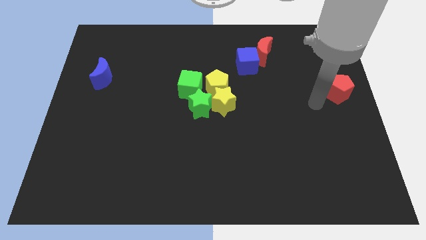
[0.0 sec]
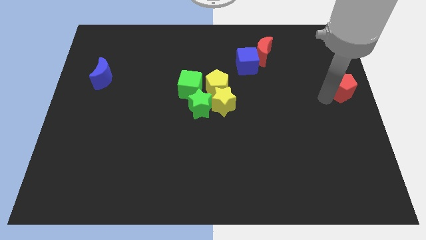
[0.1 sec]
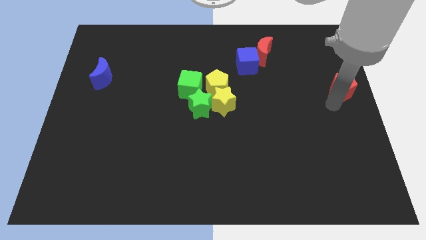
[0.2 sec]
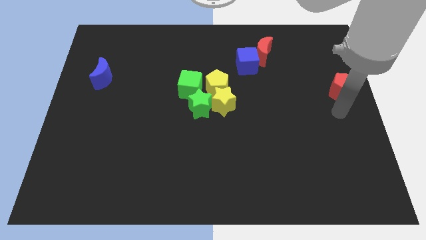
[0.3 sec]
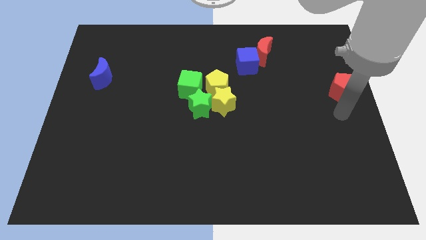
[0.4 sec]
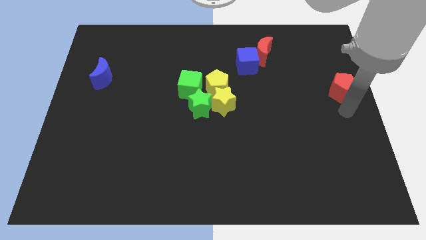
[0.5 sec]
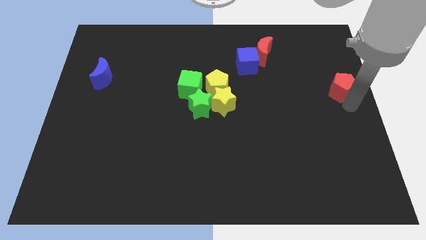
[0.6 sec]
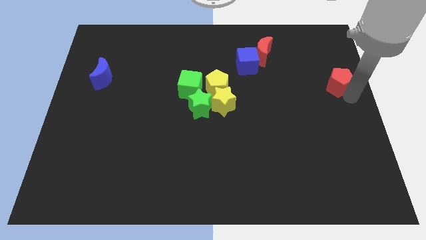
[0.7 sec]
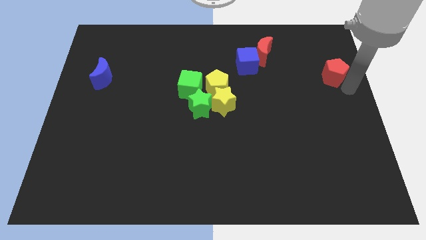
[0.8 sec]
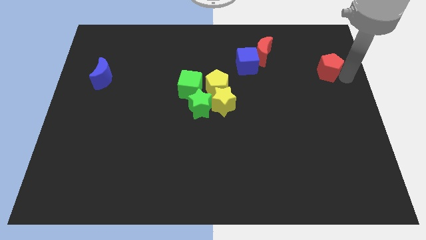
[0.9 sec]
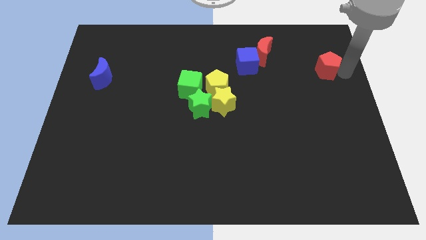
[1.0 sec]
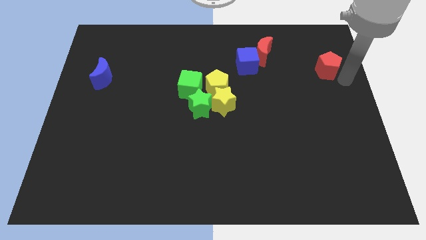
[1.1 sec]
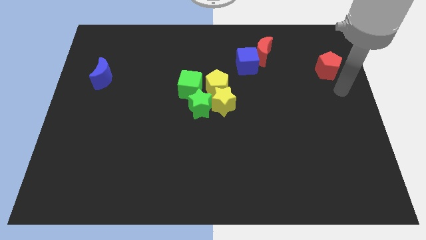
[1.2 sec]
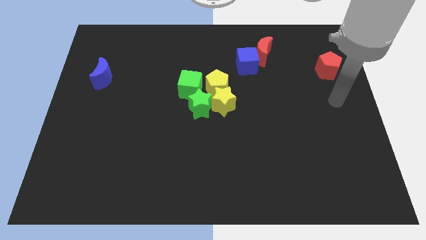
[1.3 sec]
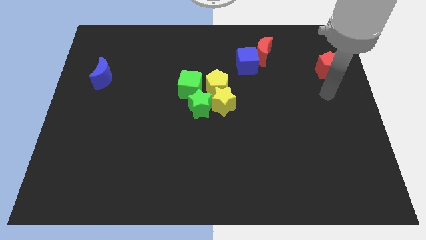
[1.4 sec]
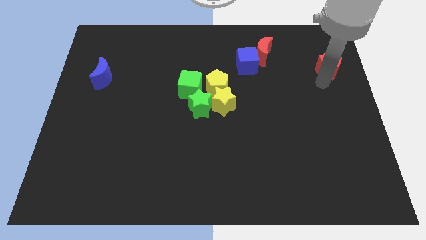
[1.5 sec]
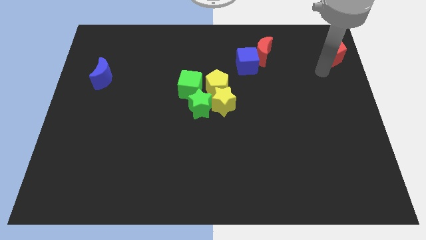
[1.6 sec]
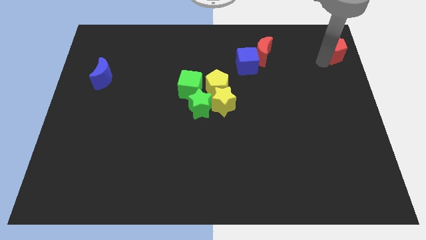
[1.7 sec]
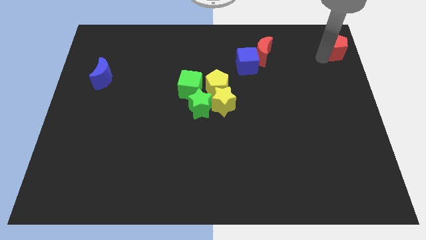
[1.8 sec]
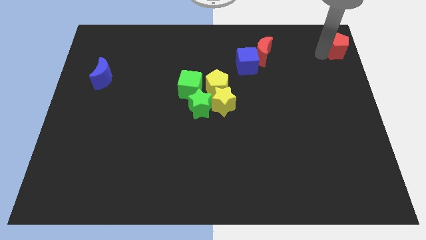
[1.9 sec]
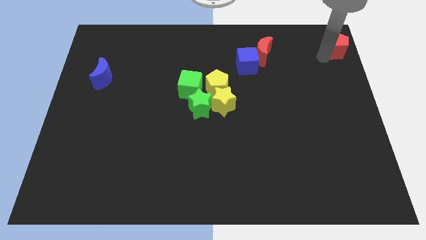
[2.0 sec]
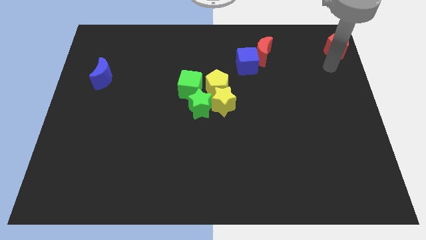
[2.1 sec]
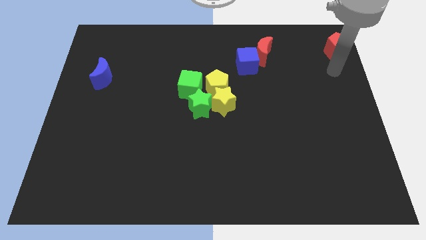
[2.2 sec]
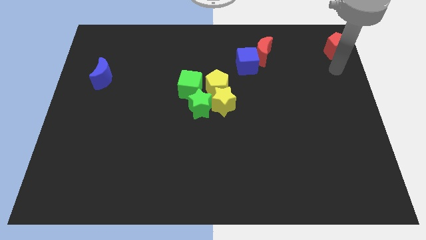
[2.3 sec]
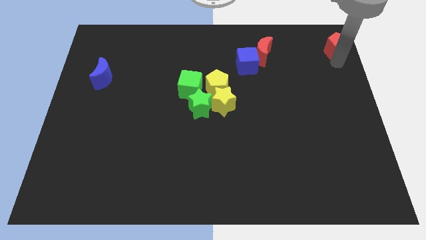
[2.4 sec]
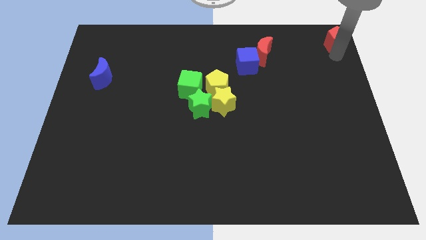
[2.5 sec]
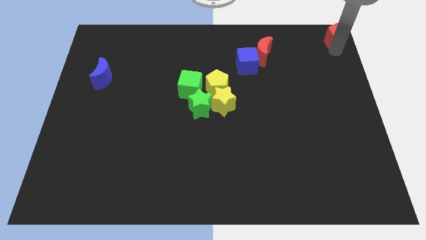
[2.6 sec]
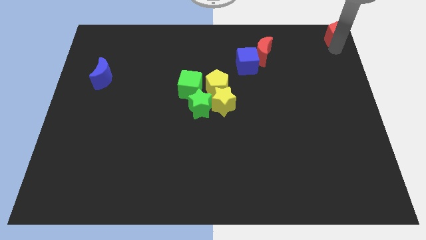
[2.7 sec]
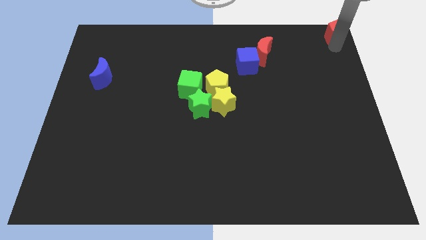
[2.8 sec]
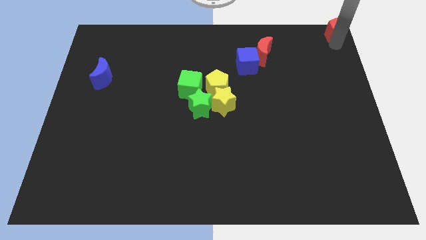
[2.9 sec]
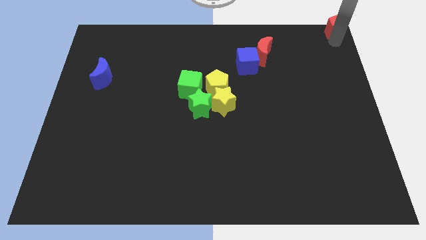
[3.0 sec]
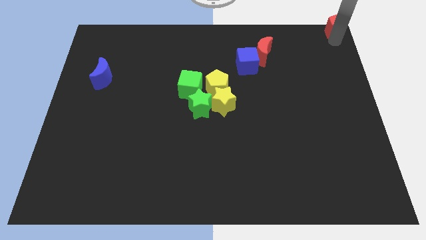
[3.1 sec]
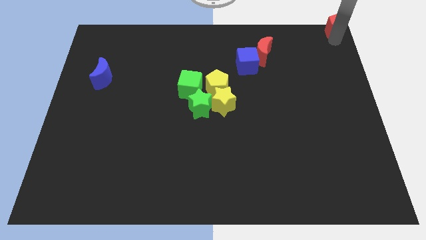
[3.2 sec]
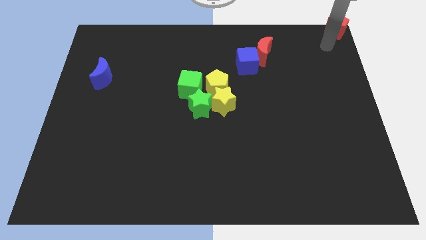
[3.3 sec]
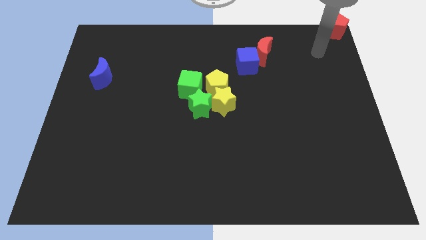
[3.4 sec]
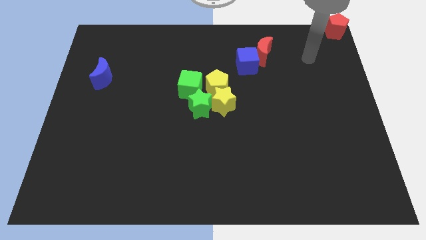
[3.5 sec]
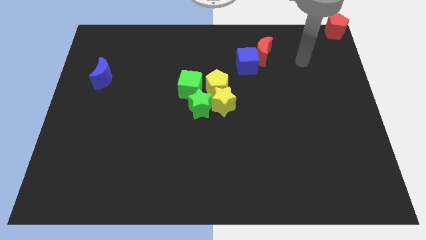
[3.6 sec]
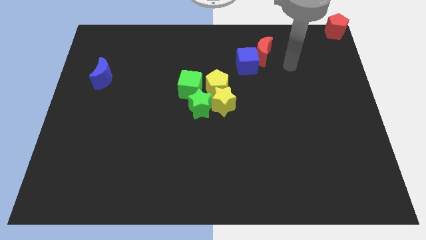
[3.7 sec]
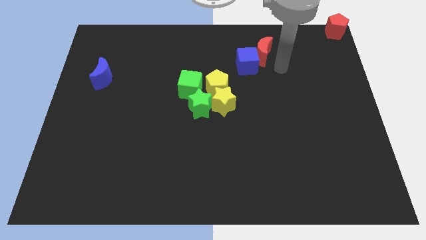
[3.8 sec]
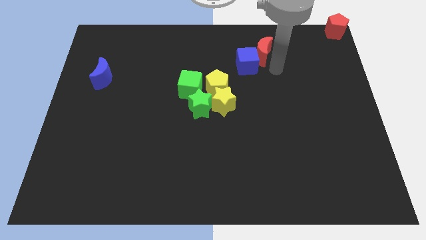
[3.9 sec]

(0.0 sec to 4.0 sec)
move the red pentagon towards the top right of the board

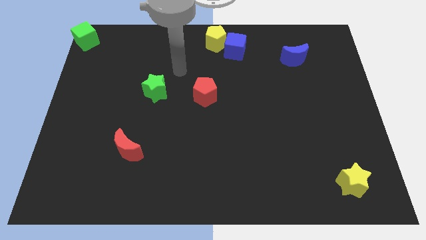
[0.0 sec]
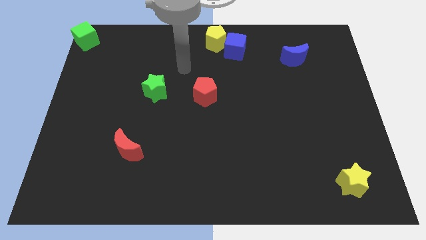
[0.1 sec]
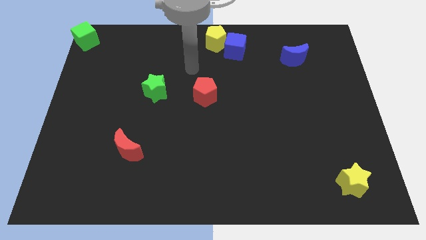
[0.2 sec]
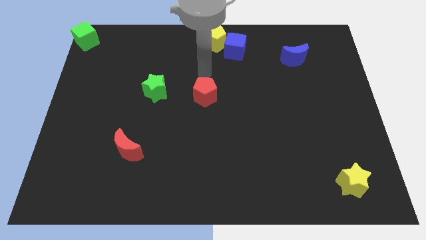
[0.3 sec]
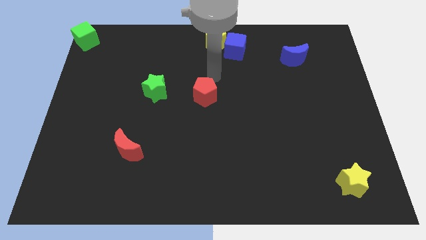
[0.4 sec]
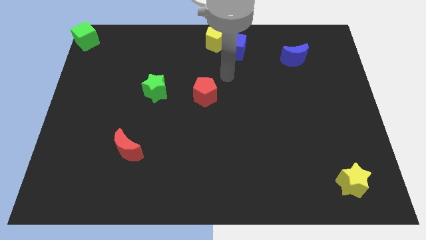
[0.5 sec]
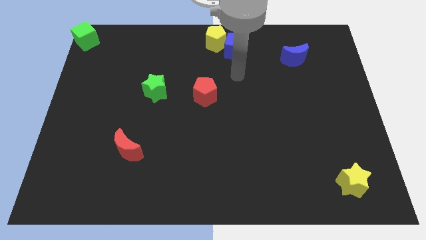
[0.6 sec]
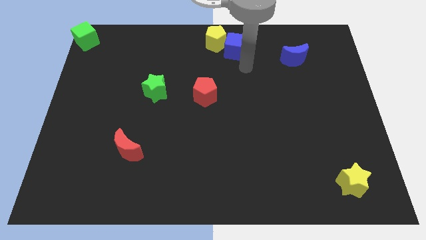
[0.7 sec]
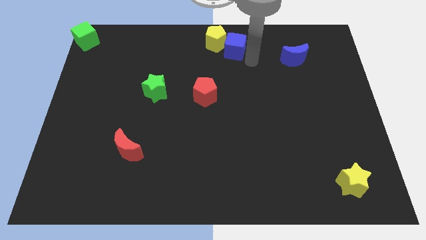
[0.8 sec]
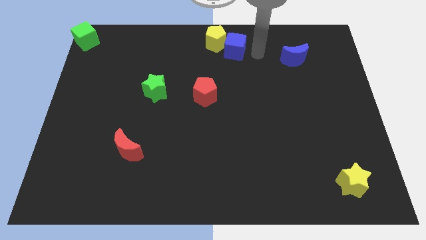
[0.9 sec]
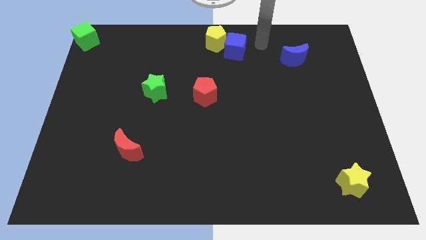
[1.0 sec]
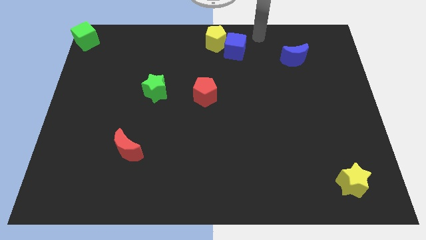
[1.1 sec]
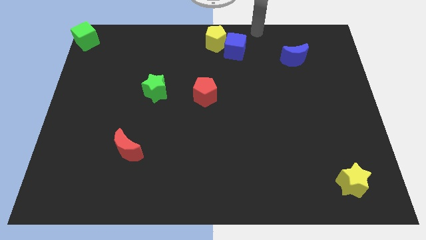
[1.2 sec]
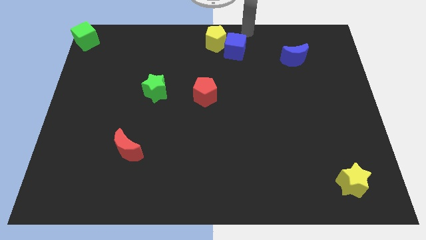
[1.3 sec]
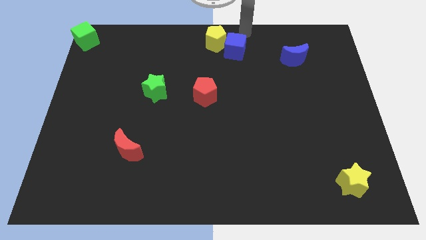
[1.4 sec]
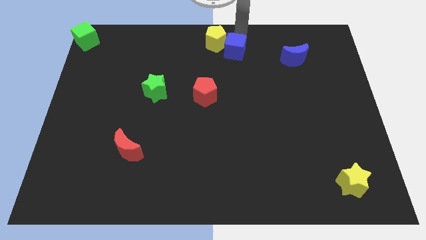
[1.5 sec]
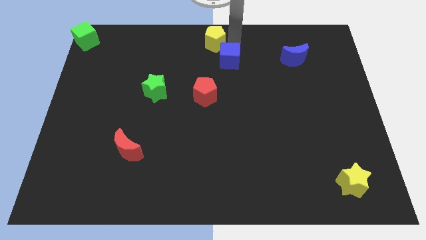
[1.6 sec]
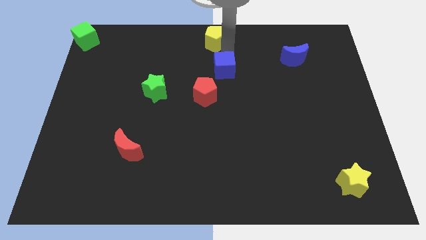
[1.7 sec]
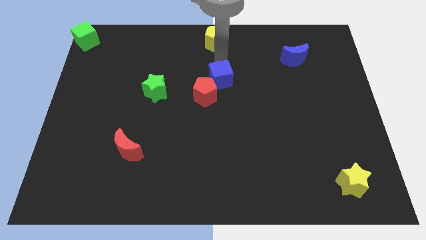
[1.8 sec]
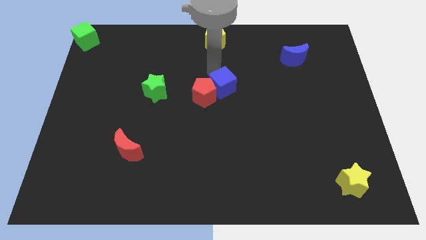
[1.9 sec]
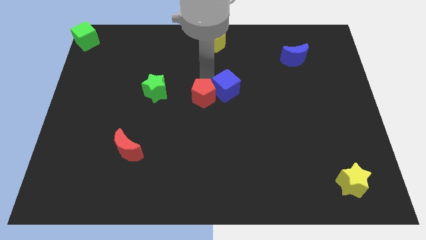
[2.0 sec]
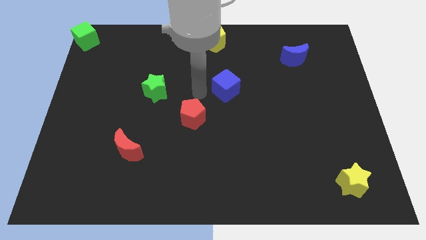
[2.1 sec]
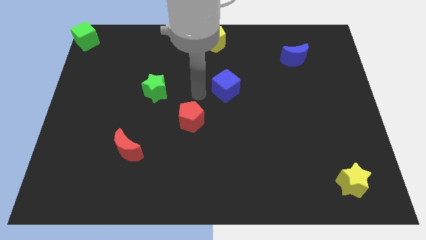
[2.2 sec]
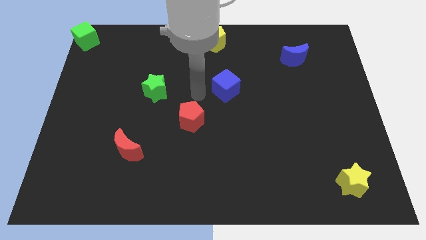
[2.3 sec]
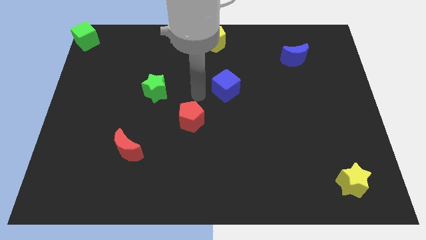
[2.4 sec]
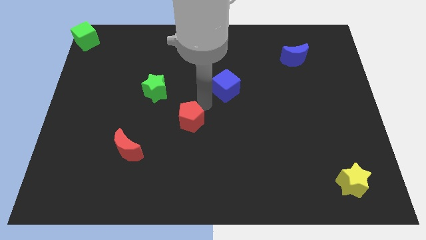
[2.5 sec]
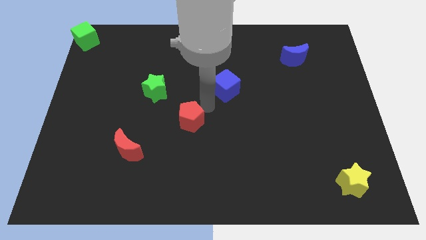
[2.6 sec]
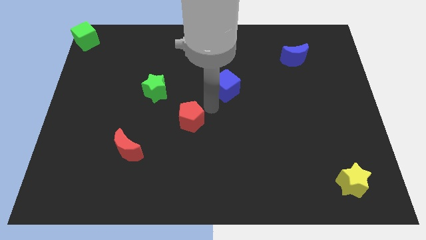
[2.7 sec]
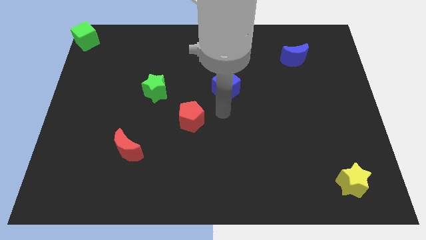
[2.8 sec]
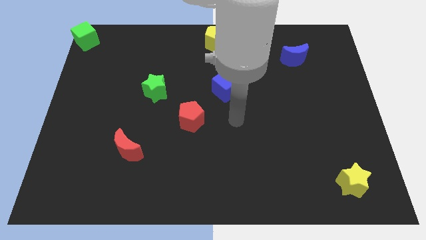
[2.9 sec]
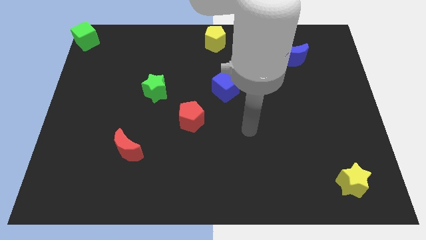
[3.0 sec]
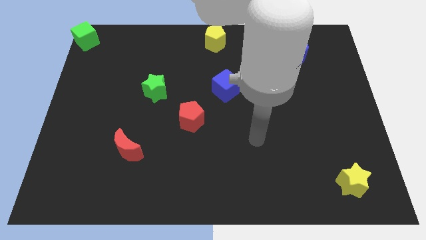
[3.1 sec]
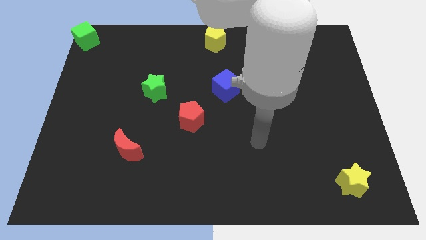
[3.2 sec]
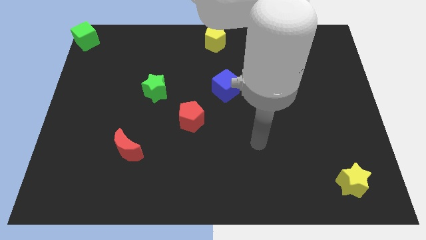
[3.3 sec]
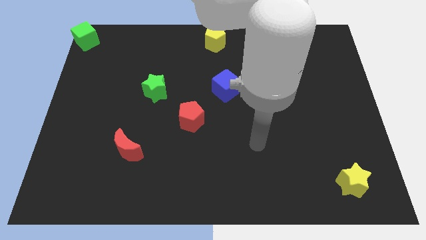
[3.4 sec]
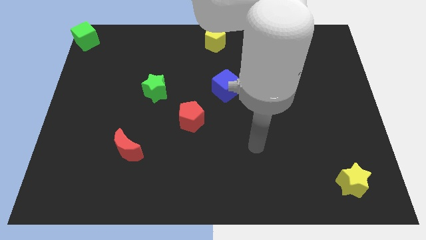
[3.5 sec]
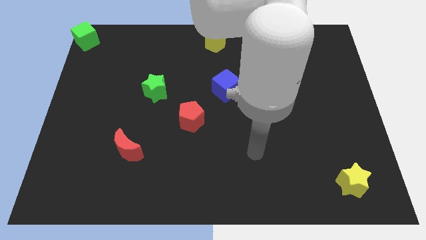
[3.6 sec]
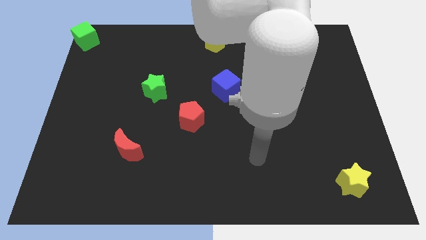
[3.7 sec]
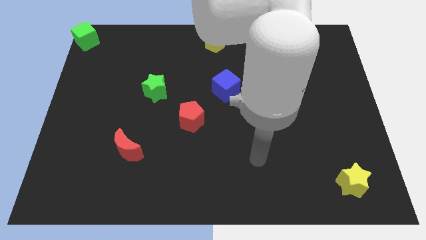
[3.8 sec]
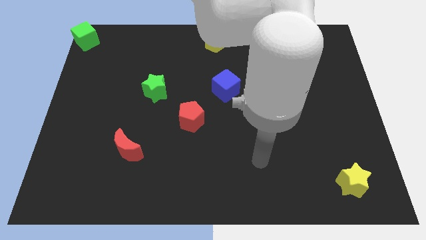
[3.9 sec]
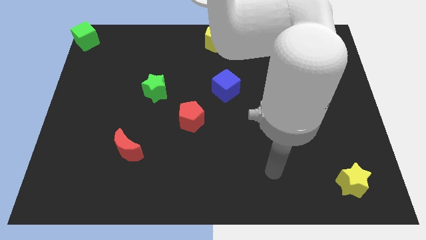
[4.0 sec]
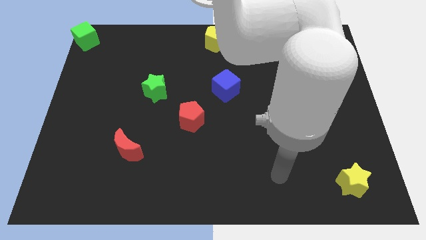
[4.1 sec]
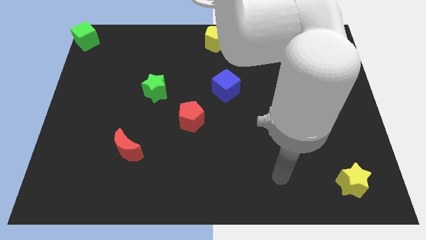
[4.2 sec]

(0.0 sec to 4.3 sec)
separate the blue cube from the yellow pentagon

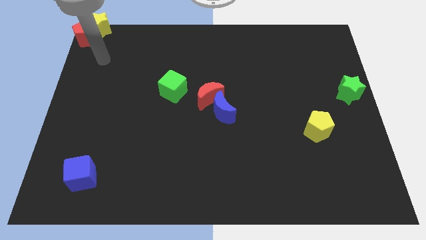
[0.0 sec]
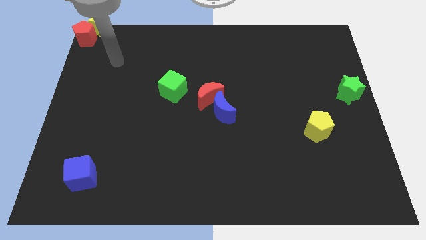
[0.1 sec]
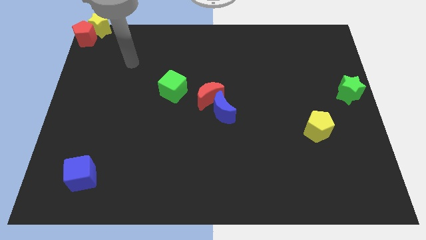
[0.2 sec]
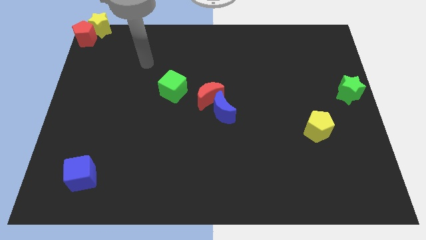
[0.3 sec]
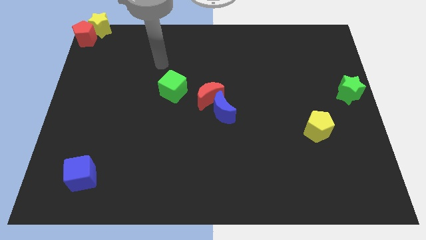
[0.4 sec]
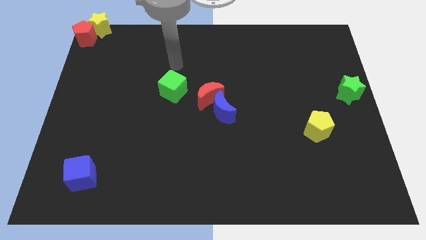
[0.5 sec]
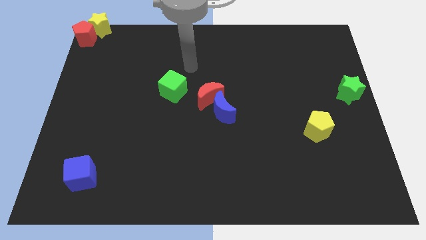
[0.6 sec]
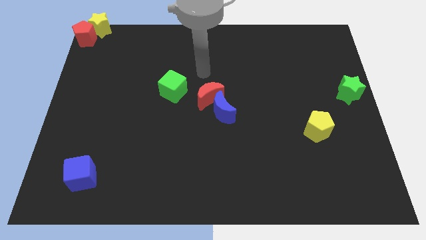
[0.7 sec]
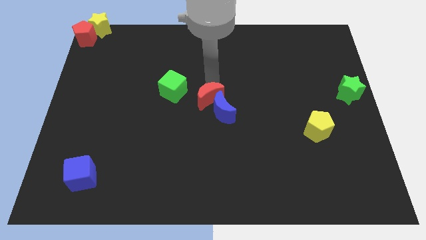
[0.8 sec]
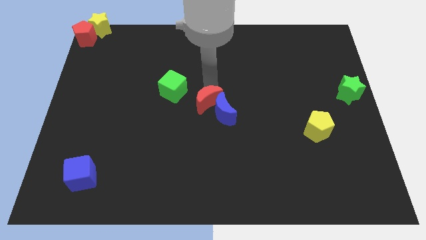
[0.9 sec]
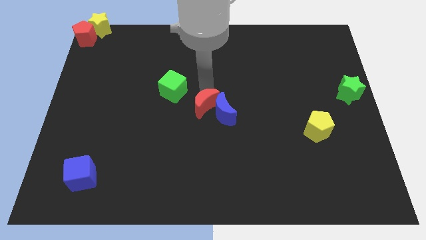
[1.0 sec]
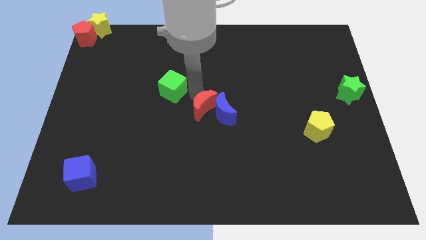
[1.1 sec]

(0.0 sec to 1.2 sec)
slightly move the red moon to the left side of the blue moon
